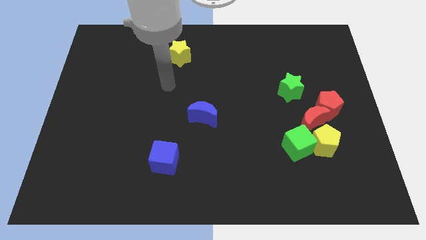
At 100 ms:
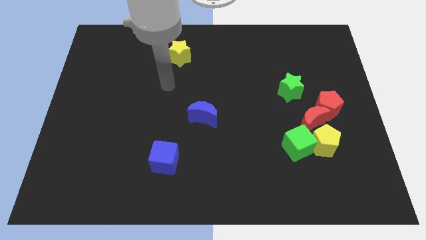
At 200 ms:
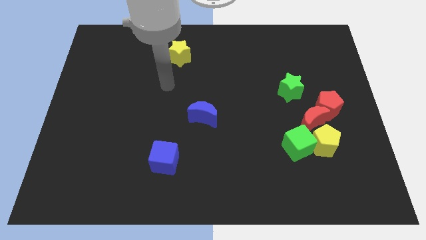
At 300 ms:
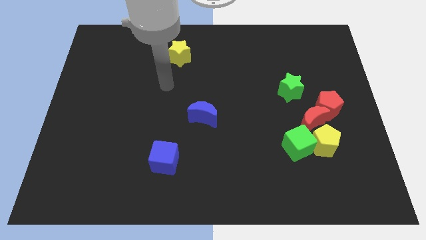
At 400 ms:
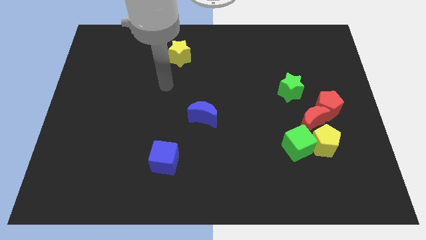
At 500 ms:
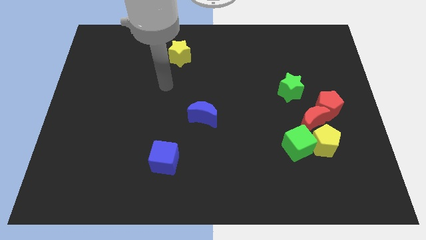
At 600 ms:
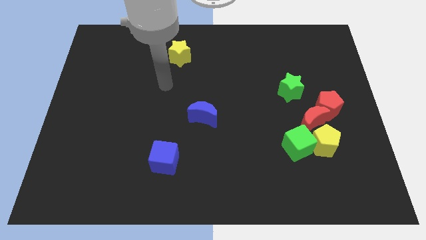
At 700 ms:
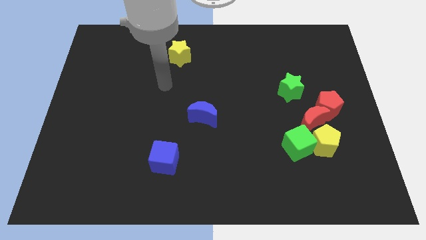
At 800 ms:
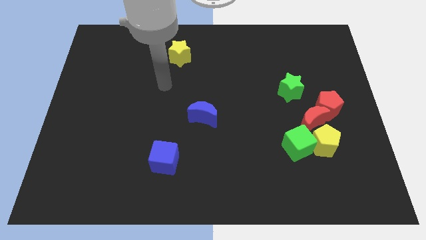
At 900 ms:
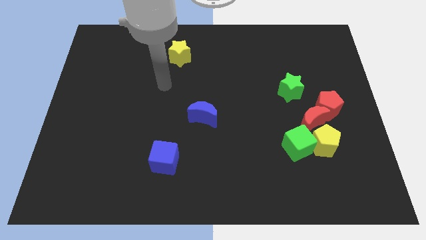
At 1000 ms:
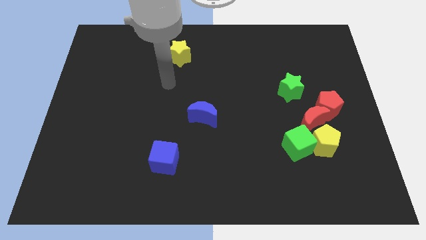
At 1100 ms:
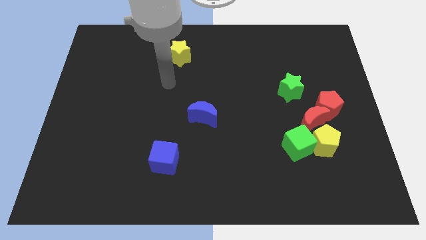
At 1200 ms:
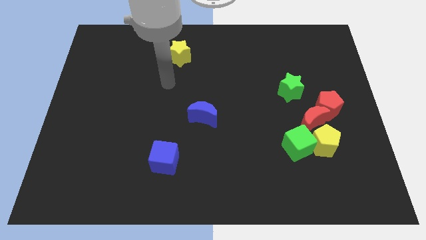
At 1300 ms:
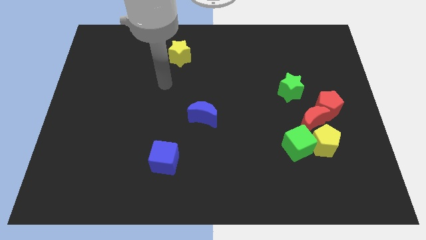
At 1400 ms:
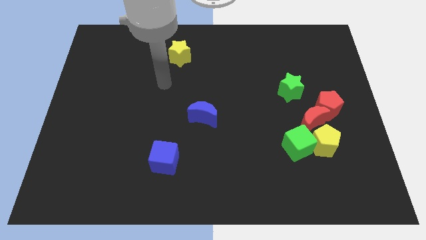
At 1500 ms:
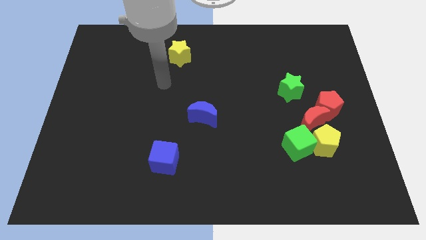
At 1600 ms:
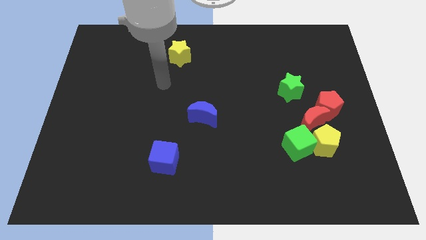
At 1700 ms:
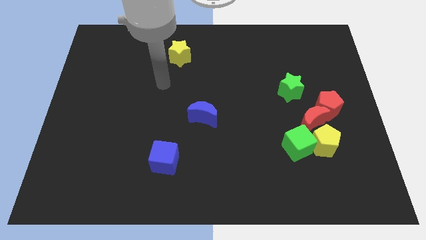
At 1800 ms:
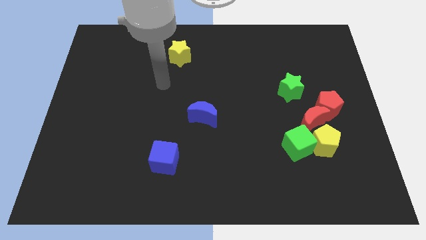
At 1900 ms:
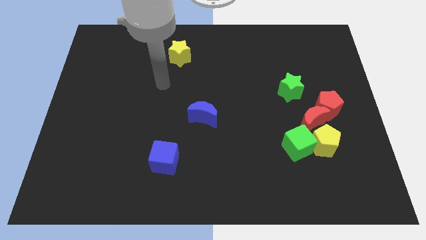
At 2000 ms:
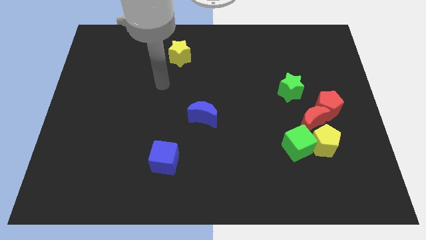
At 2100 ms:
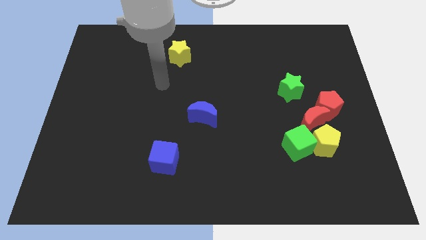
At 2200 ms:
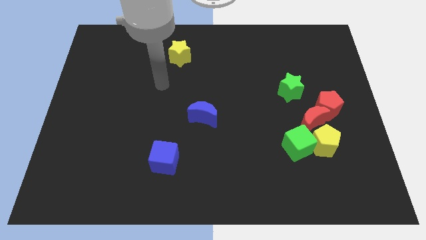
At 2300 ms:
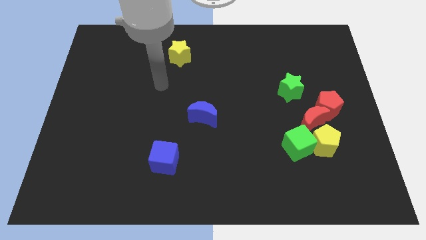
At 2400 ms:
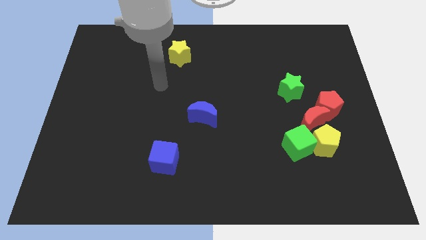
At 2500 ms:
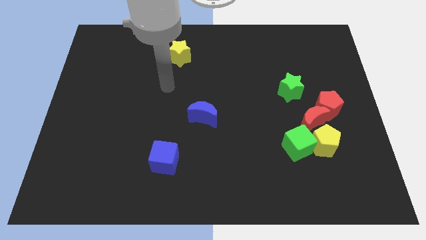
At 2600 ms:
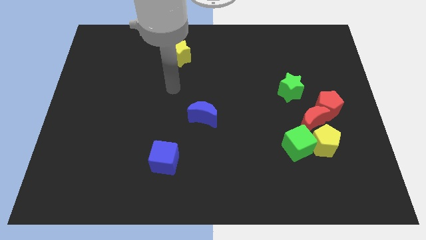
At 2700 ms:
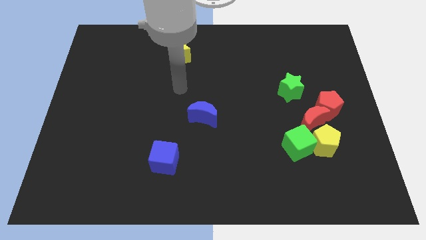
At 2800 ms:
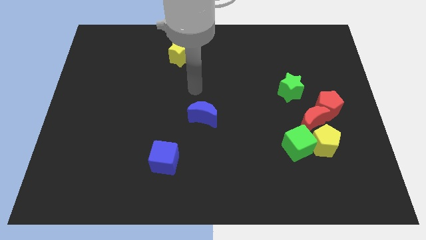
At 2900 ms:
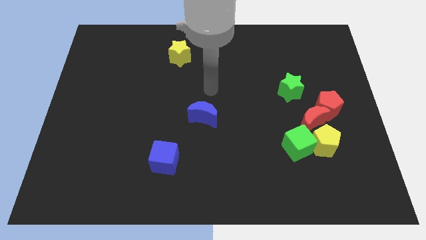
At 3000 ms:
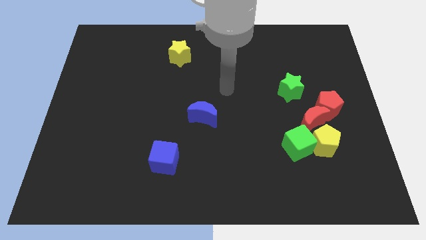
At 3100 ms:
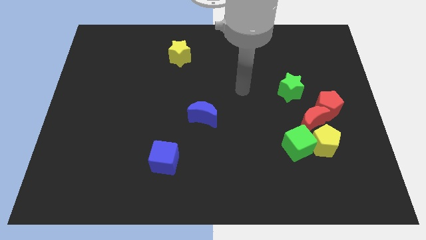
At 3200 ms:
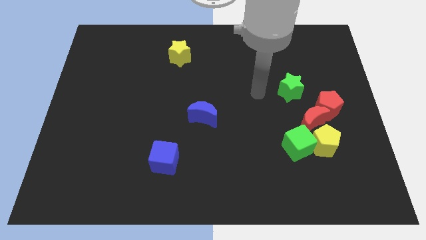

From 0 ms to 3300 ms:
move your arm to the left of the green star

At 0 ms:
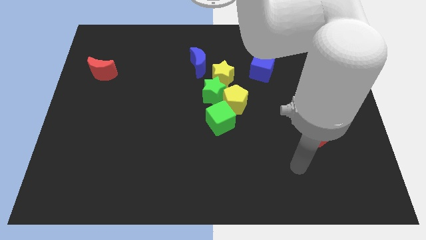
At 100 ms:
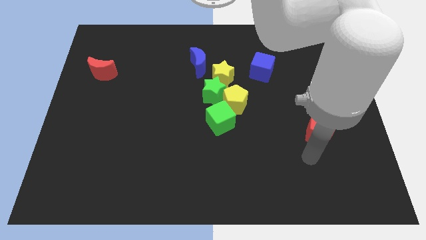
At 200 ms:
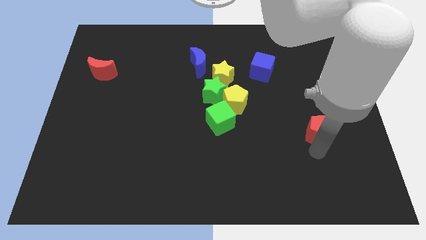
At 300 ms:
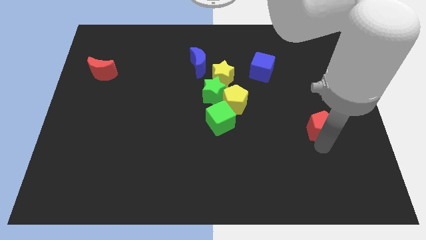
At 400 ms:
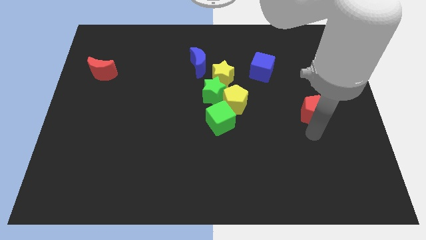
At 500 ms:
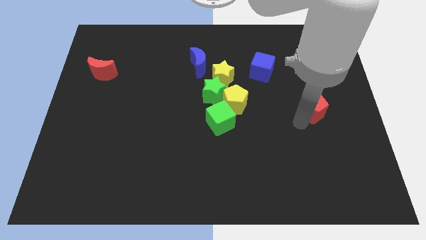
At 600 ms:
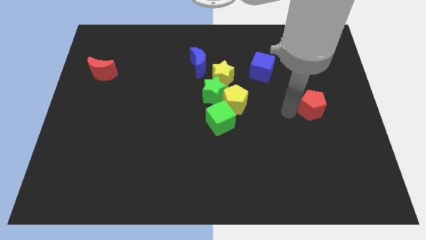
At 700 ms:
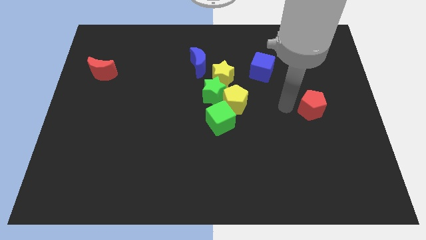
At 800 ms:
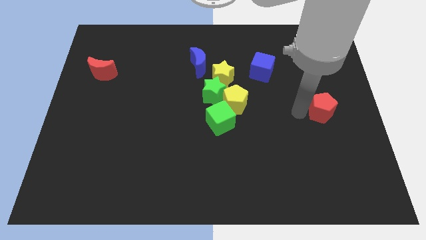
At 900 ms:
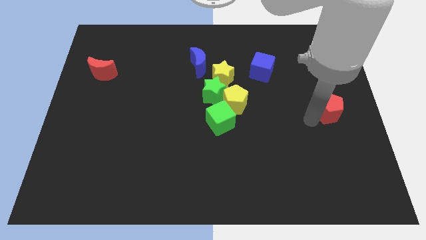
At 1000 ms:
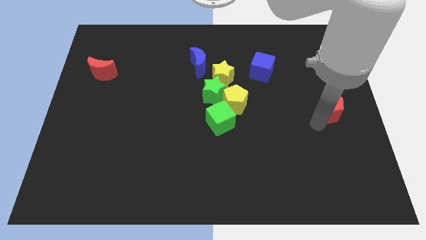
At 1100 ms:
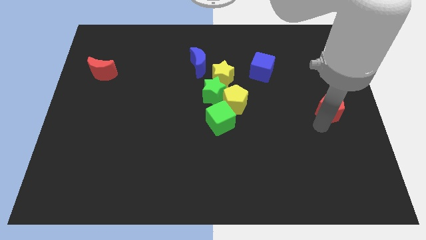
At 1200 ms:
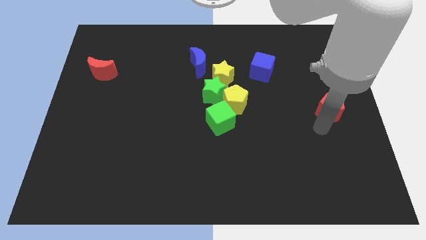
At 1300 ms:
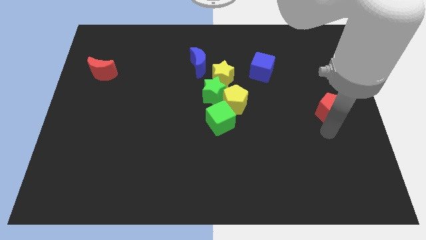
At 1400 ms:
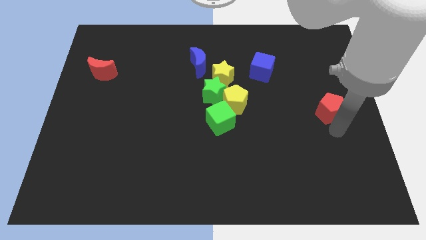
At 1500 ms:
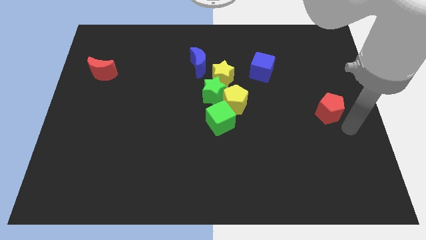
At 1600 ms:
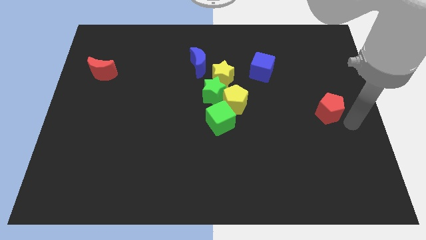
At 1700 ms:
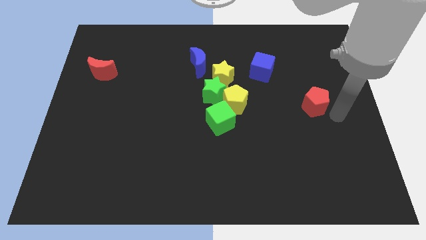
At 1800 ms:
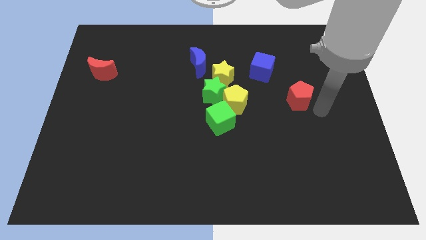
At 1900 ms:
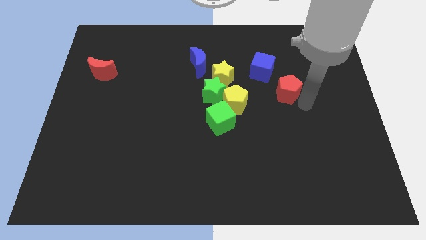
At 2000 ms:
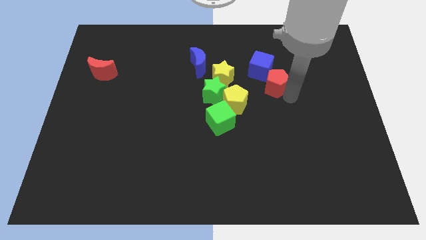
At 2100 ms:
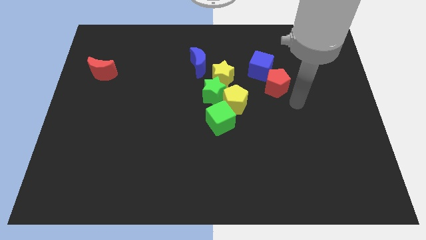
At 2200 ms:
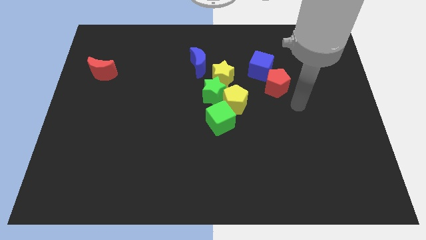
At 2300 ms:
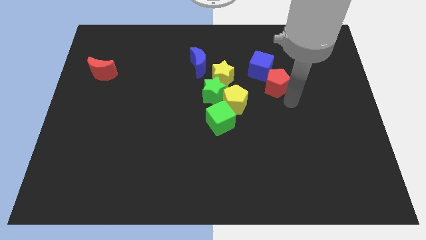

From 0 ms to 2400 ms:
move the red pentagon close to the blue cube

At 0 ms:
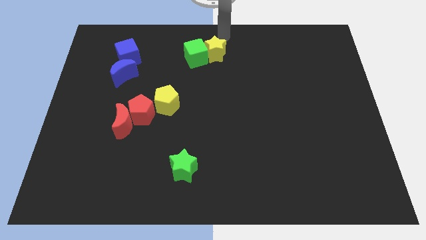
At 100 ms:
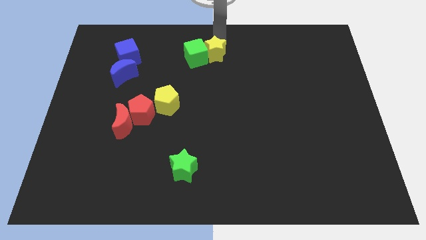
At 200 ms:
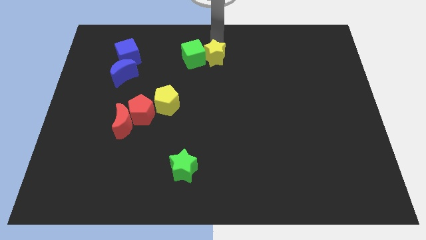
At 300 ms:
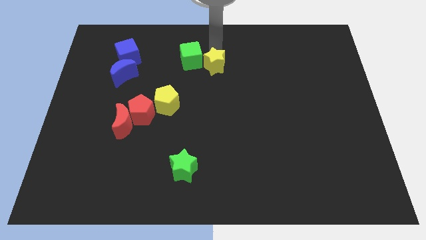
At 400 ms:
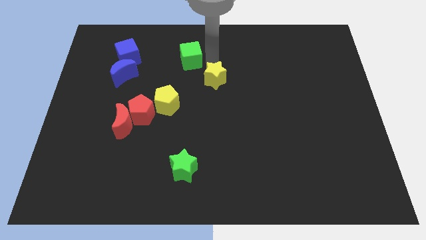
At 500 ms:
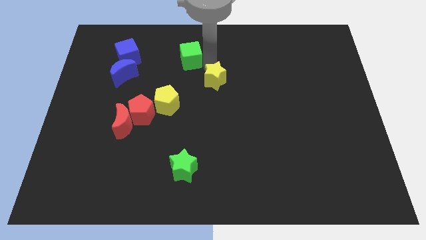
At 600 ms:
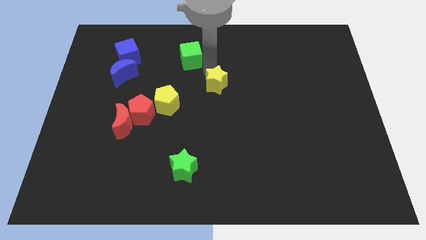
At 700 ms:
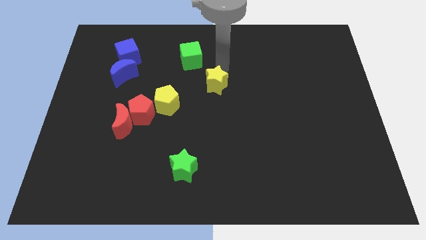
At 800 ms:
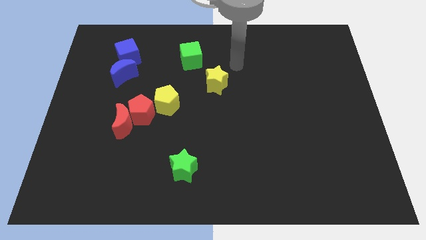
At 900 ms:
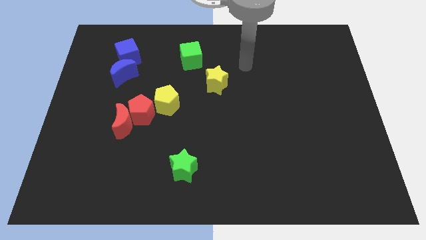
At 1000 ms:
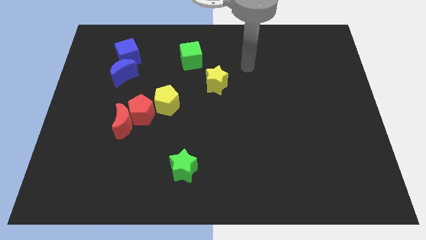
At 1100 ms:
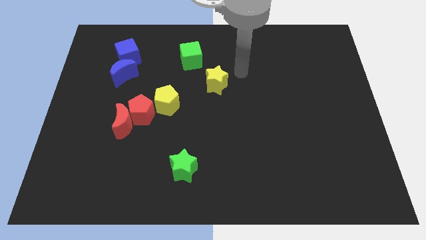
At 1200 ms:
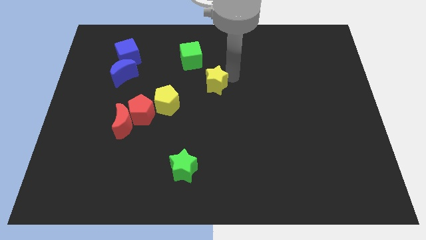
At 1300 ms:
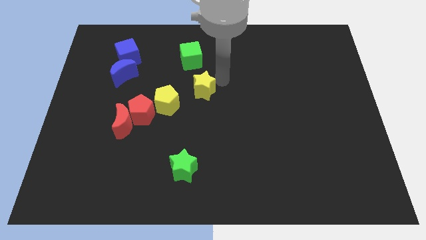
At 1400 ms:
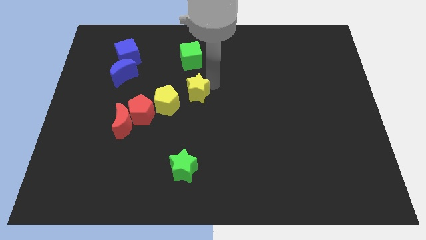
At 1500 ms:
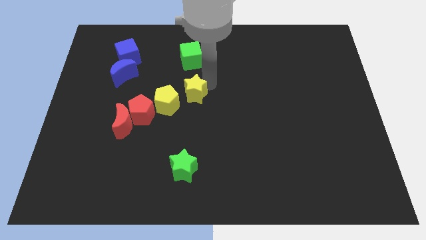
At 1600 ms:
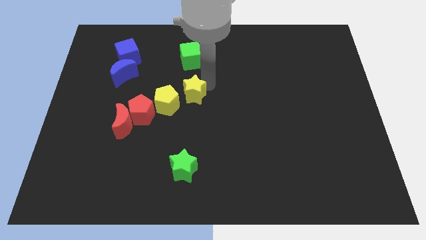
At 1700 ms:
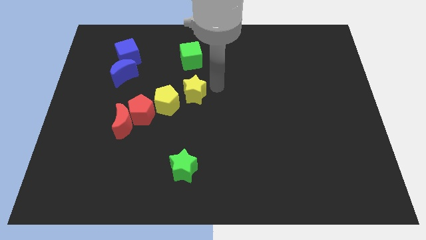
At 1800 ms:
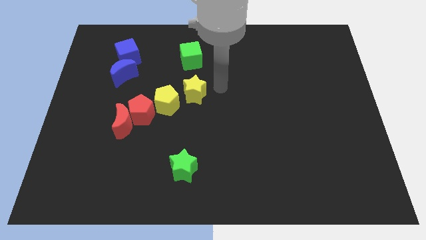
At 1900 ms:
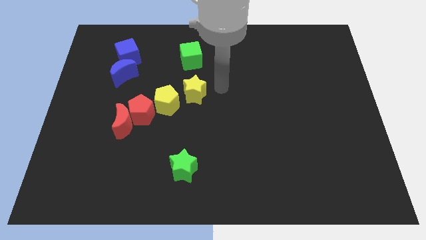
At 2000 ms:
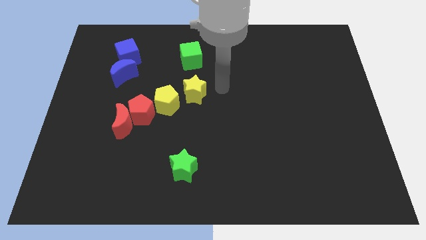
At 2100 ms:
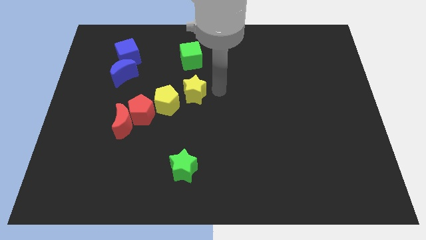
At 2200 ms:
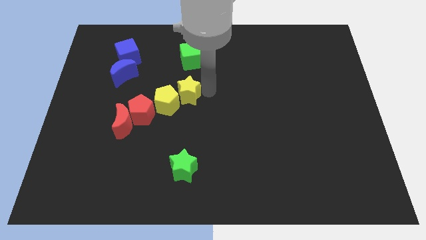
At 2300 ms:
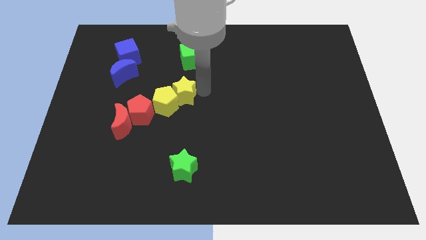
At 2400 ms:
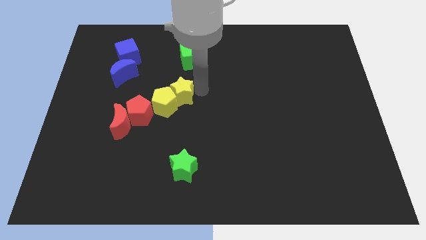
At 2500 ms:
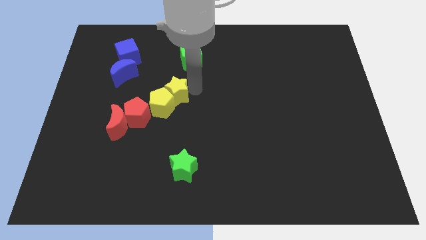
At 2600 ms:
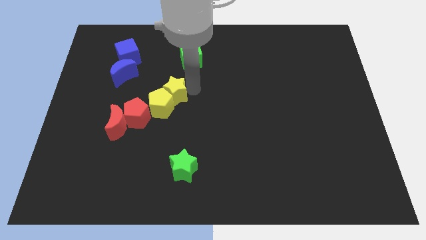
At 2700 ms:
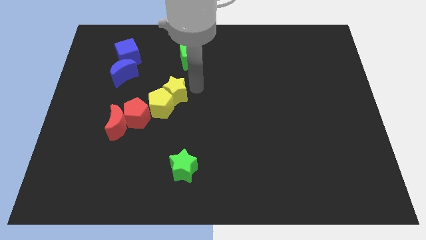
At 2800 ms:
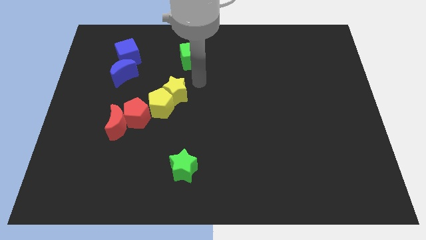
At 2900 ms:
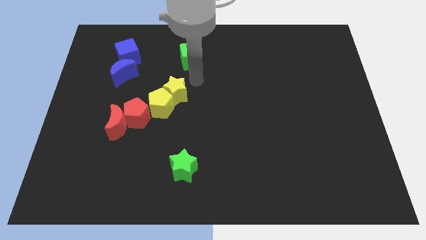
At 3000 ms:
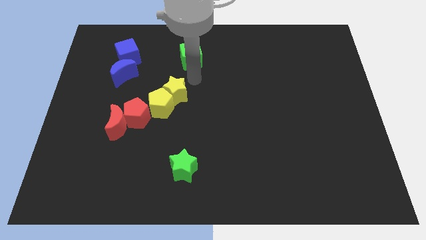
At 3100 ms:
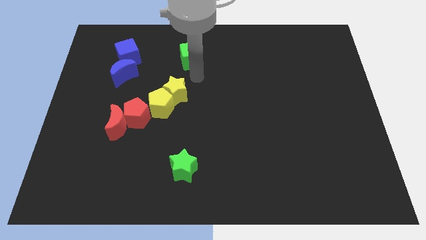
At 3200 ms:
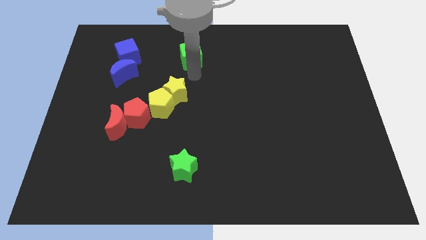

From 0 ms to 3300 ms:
move the yellow star into the top right of the yellow pentagon
